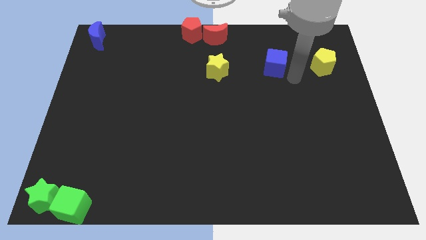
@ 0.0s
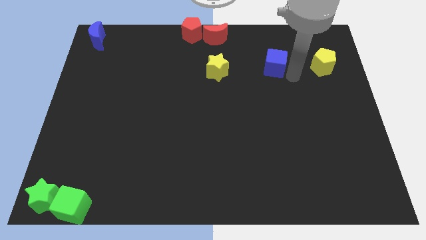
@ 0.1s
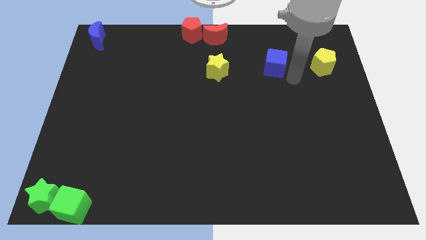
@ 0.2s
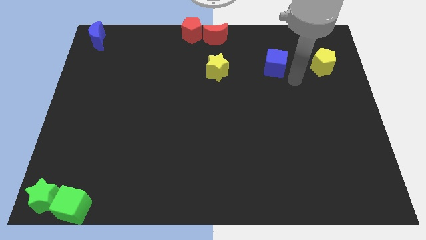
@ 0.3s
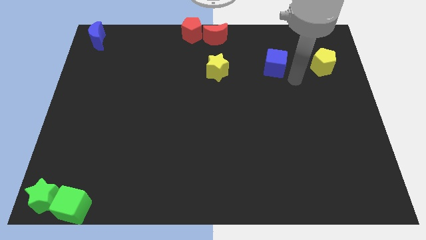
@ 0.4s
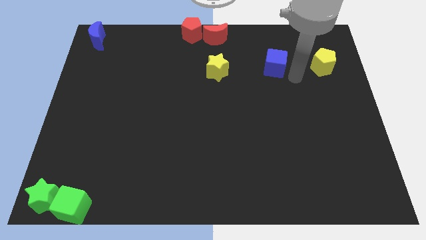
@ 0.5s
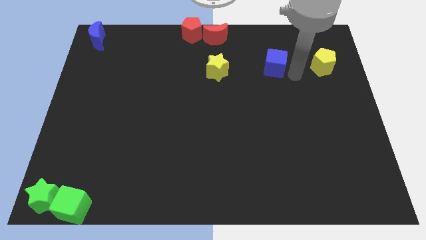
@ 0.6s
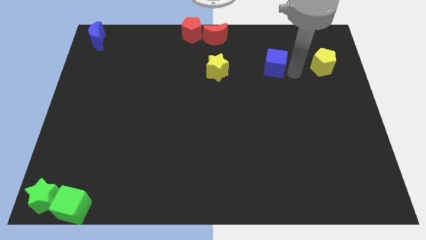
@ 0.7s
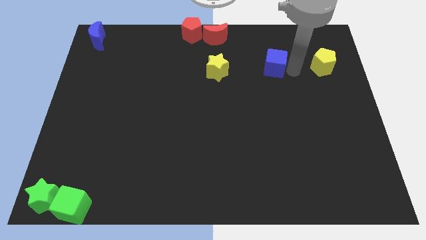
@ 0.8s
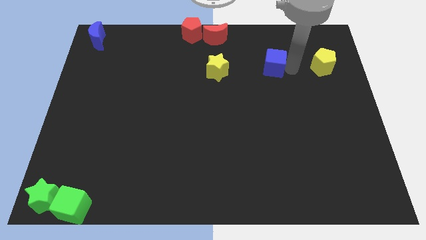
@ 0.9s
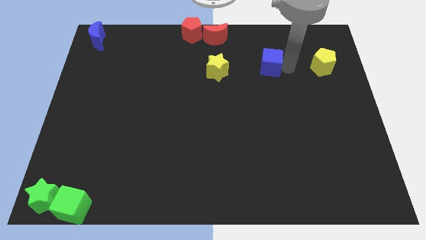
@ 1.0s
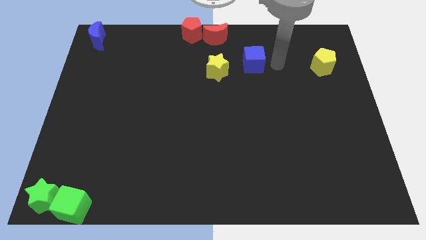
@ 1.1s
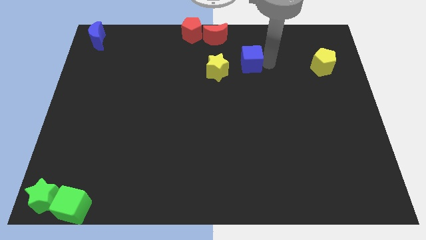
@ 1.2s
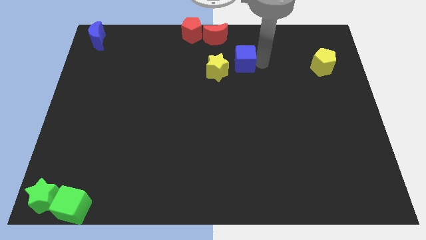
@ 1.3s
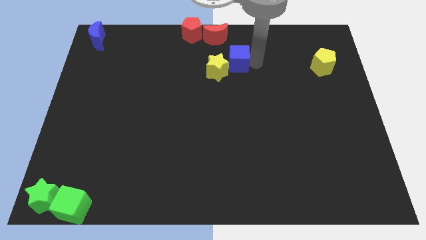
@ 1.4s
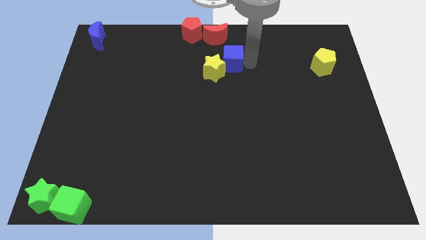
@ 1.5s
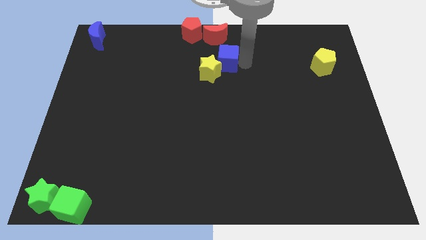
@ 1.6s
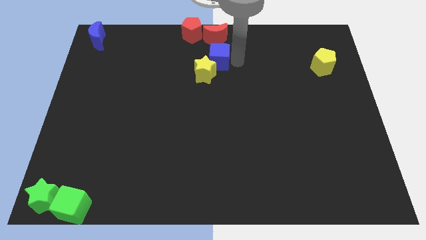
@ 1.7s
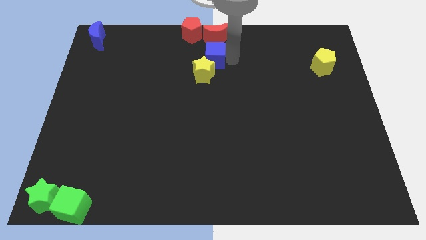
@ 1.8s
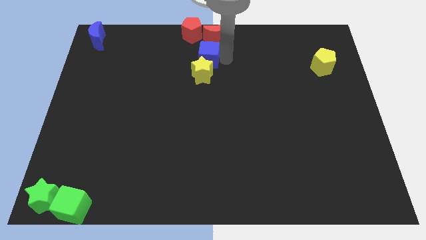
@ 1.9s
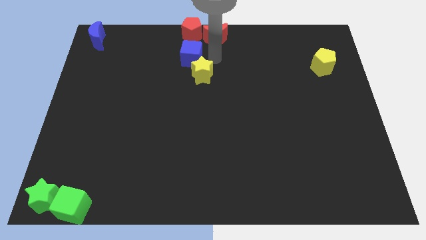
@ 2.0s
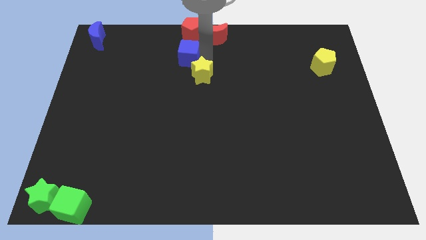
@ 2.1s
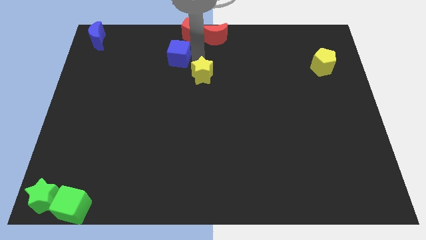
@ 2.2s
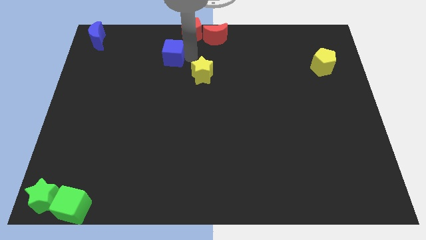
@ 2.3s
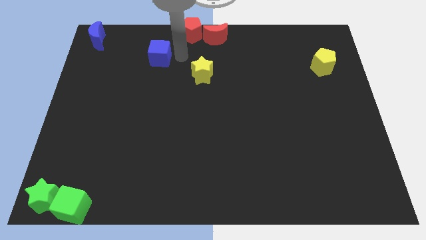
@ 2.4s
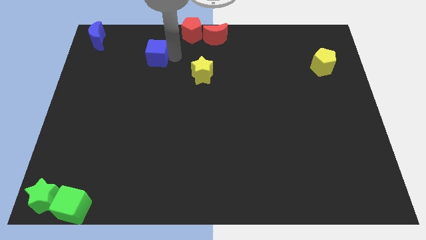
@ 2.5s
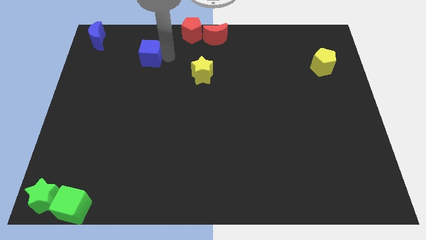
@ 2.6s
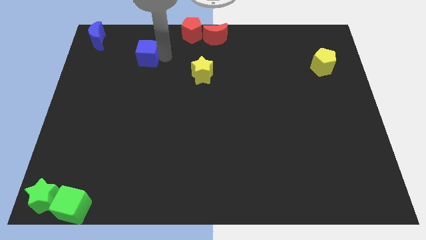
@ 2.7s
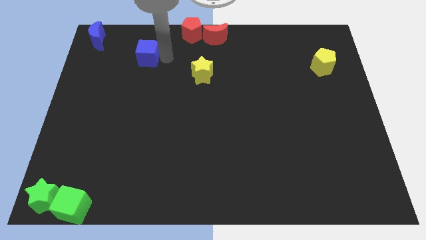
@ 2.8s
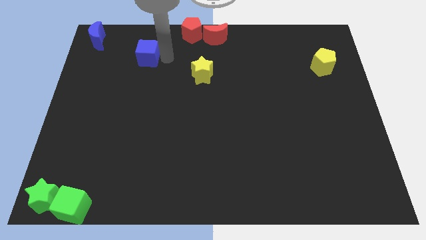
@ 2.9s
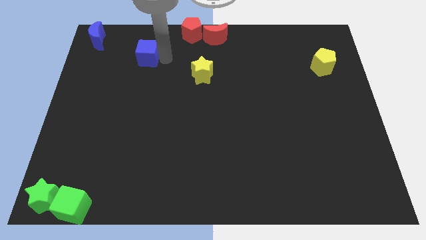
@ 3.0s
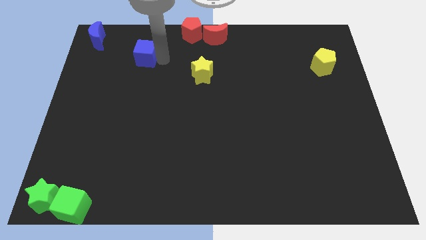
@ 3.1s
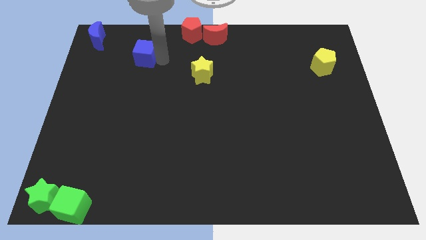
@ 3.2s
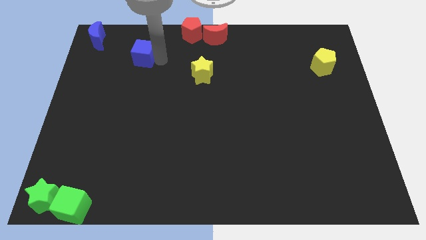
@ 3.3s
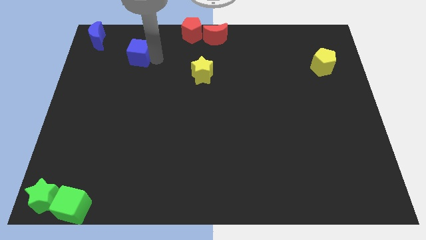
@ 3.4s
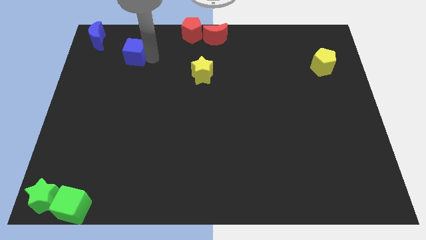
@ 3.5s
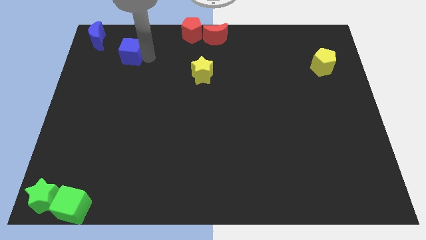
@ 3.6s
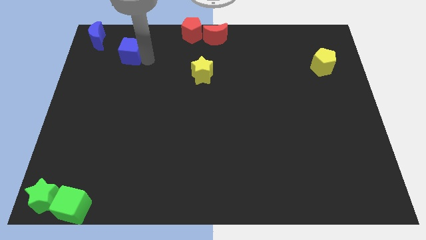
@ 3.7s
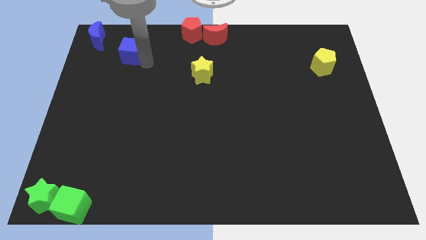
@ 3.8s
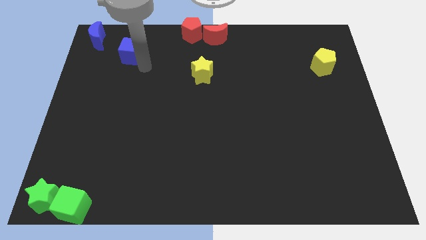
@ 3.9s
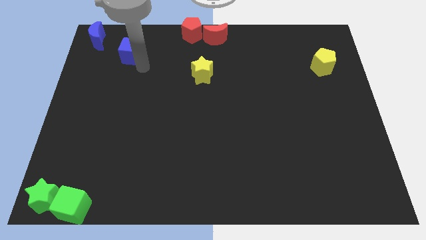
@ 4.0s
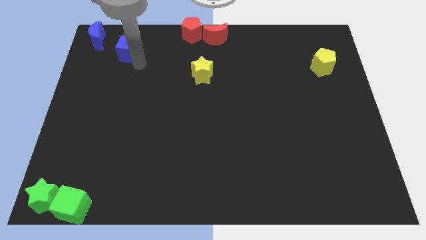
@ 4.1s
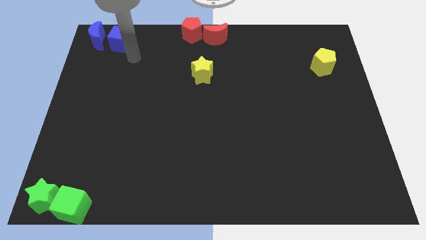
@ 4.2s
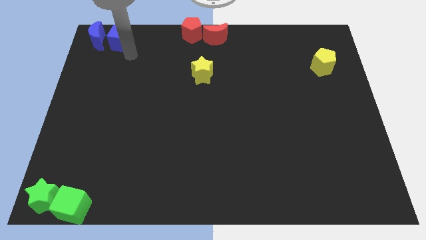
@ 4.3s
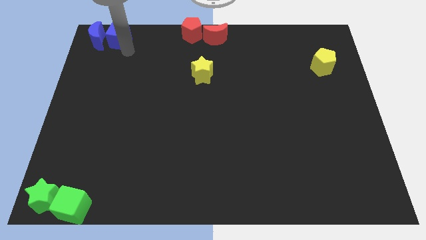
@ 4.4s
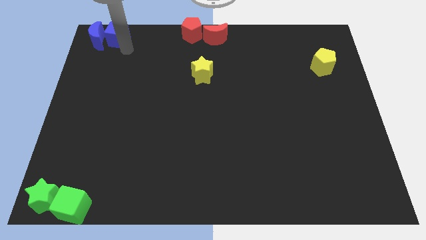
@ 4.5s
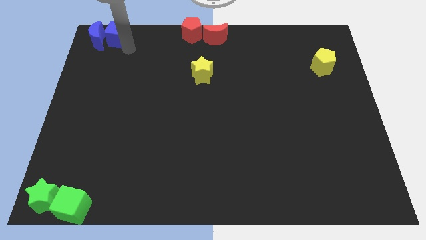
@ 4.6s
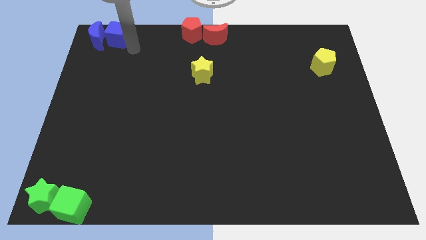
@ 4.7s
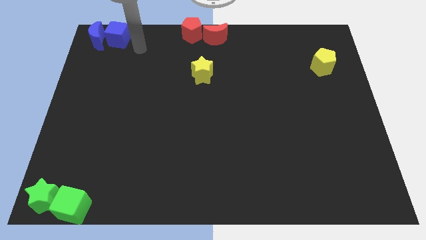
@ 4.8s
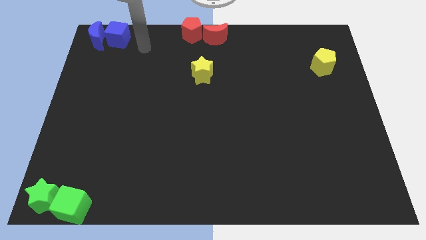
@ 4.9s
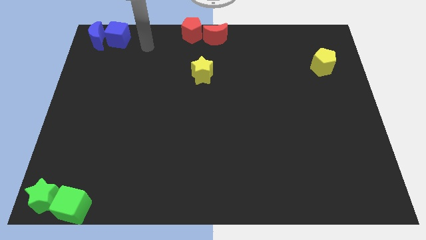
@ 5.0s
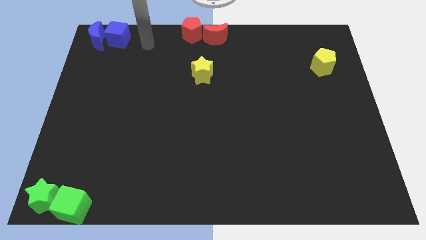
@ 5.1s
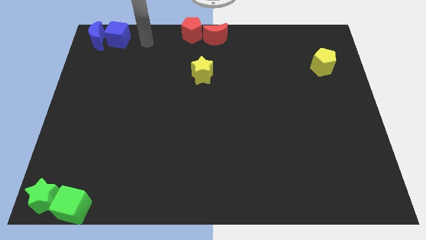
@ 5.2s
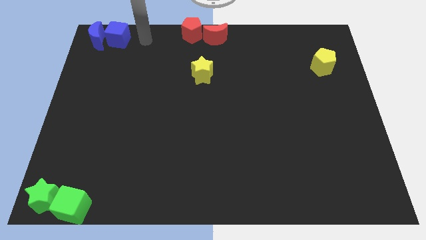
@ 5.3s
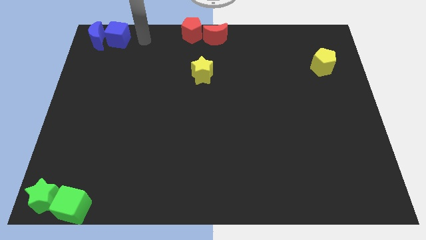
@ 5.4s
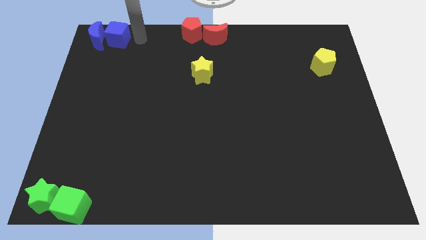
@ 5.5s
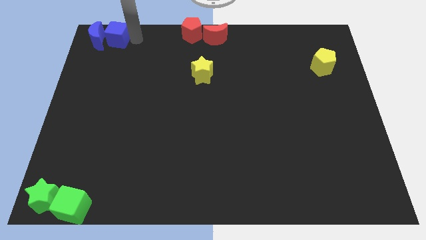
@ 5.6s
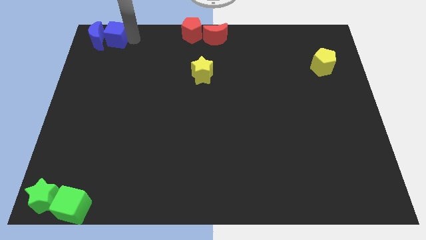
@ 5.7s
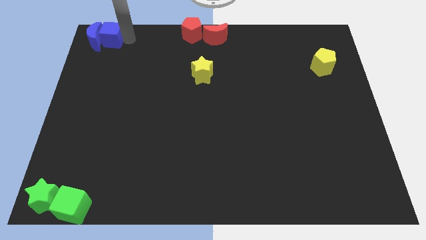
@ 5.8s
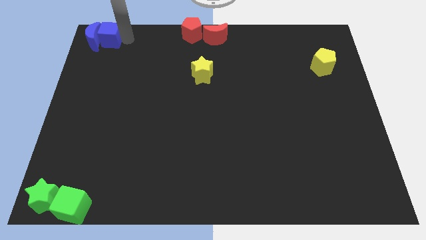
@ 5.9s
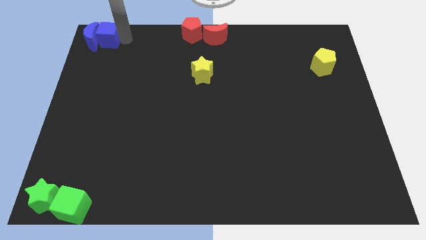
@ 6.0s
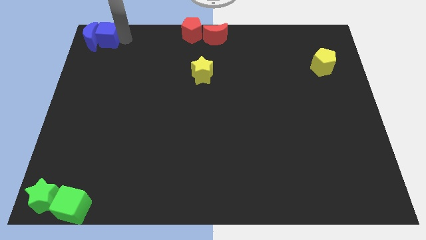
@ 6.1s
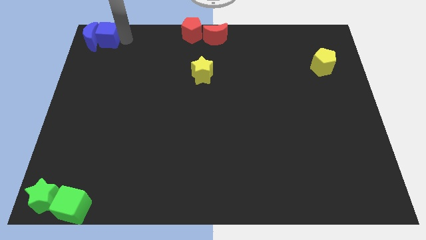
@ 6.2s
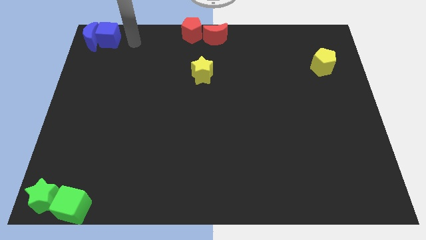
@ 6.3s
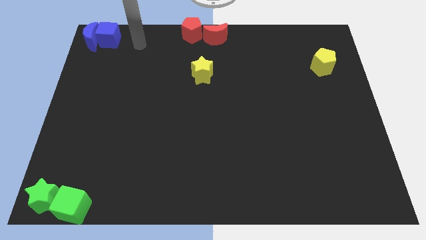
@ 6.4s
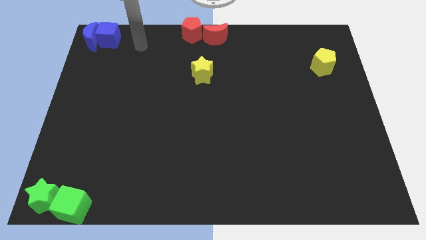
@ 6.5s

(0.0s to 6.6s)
move the blue cube into blue moon

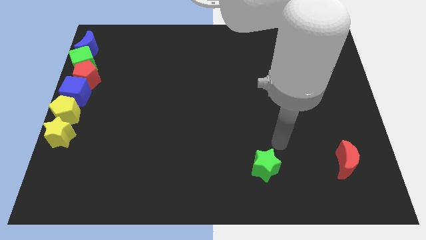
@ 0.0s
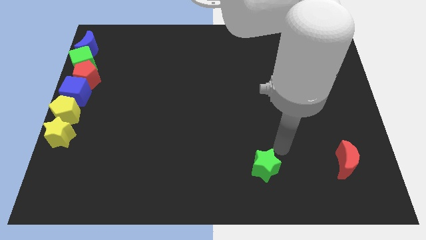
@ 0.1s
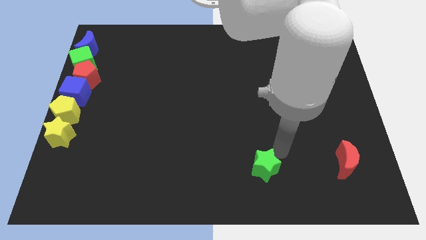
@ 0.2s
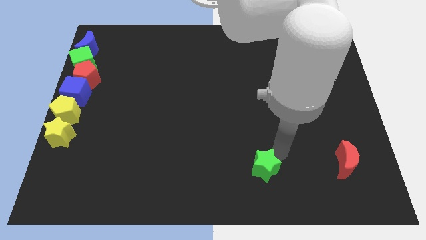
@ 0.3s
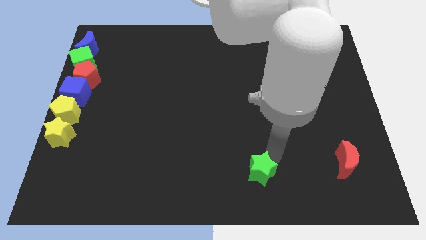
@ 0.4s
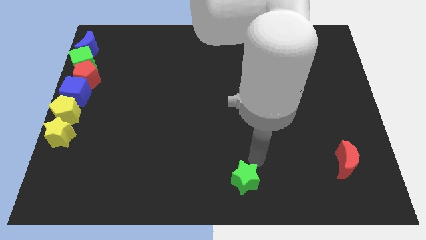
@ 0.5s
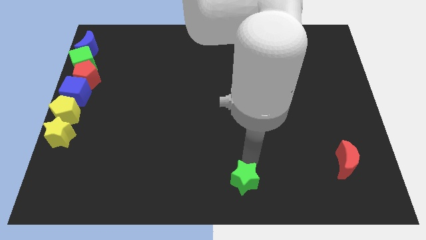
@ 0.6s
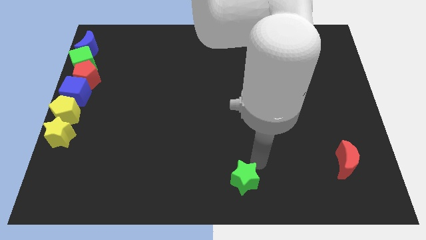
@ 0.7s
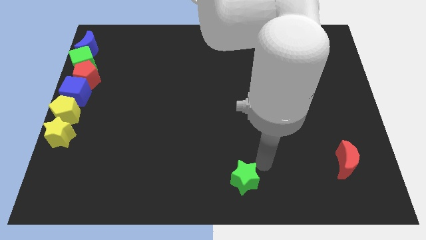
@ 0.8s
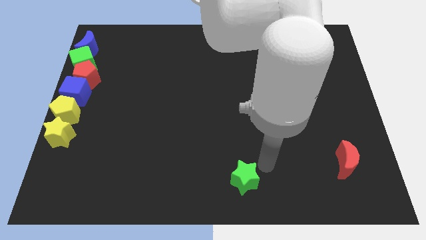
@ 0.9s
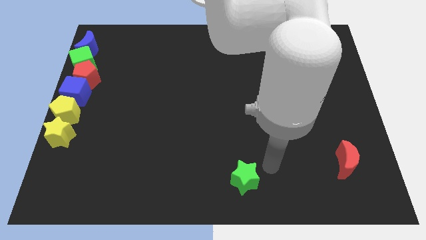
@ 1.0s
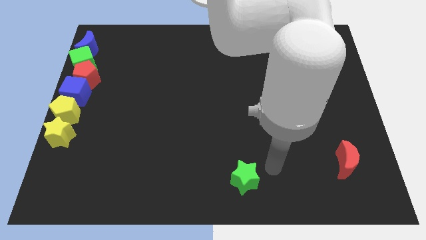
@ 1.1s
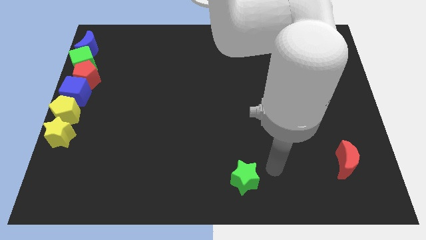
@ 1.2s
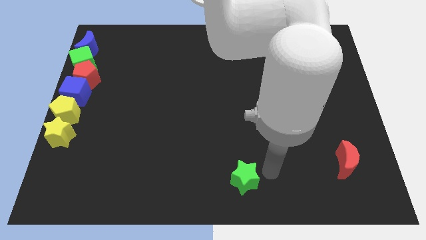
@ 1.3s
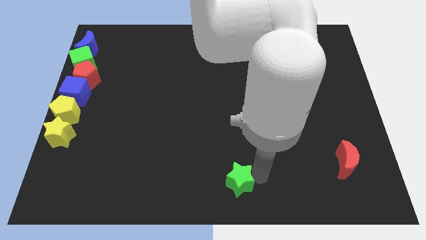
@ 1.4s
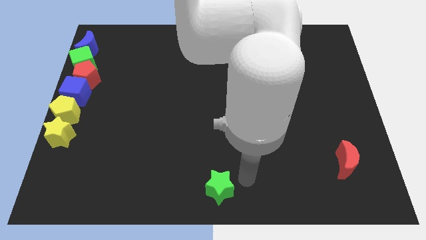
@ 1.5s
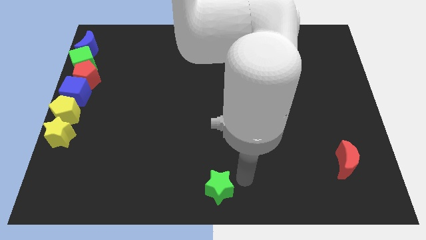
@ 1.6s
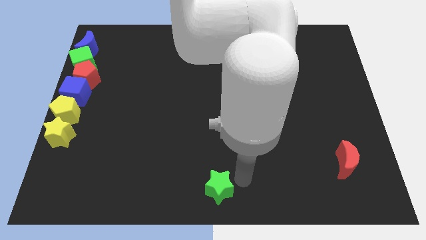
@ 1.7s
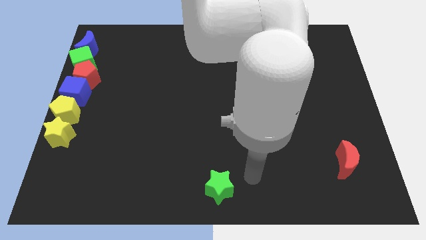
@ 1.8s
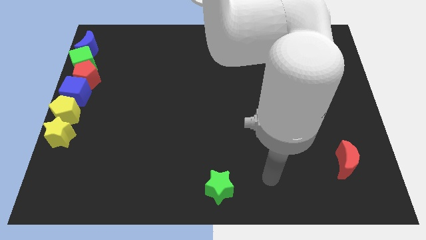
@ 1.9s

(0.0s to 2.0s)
move the green star slightly towards the bottom center of the board

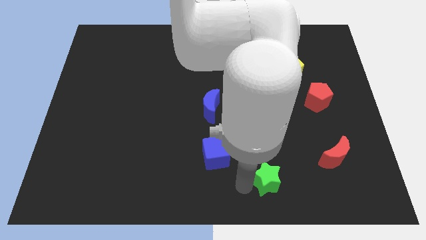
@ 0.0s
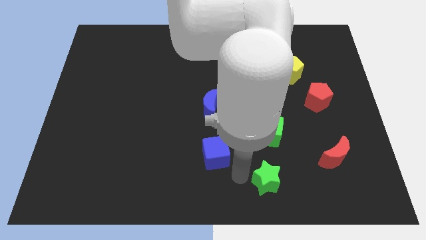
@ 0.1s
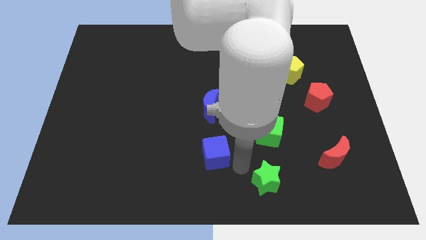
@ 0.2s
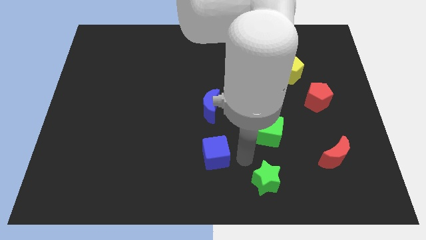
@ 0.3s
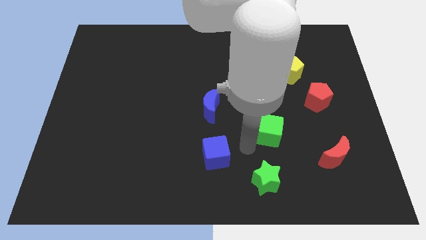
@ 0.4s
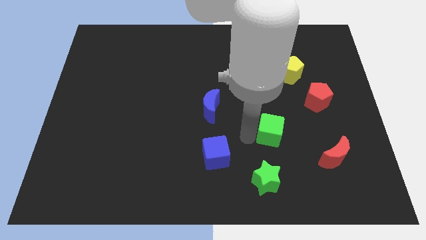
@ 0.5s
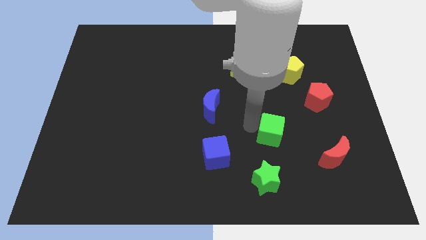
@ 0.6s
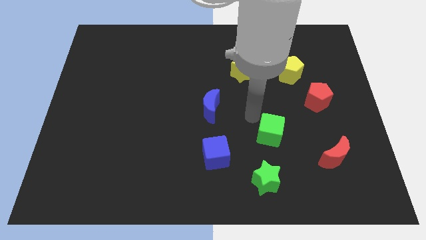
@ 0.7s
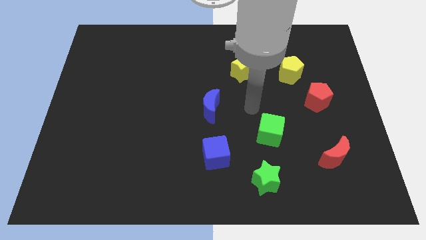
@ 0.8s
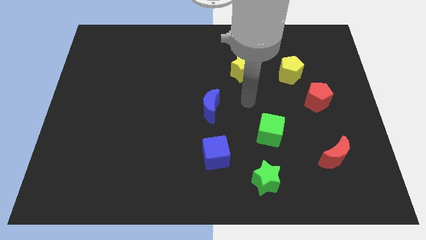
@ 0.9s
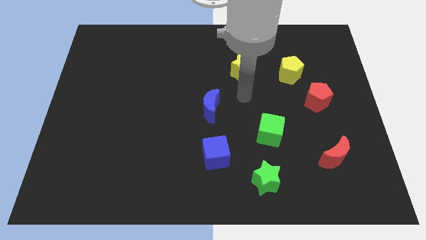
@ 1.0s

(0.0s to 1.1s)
drag the green cube slightly to the right side
